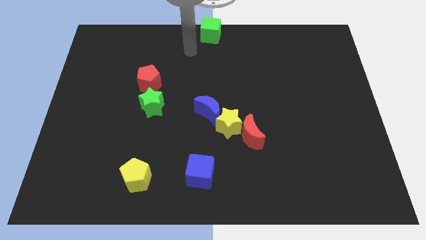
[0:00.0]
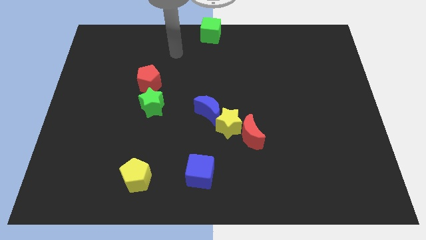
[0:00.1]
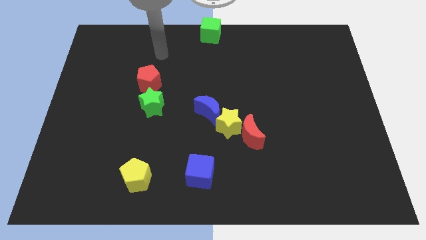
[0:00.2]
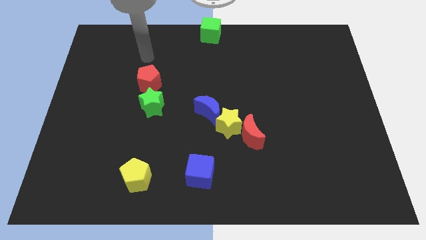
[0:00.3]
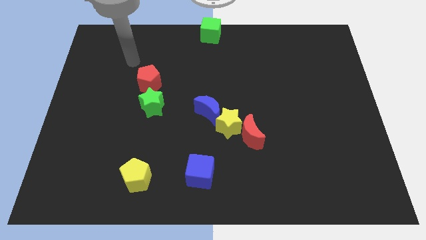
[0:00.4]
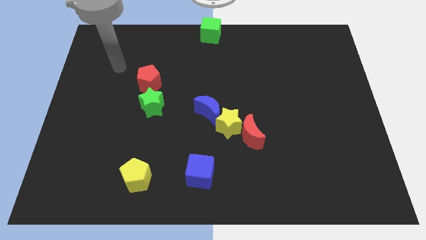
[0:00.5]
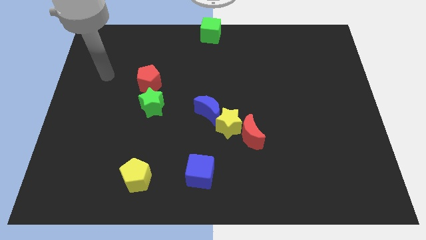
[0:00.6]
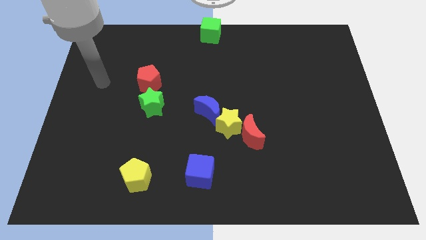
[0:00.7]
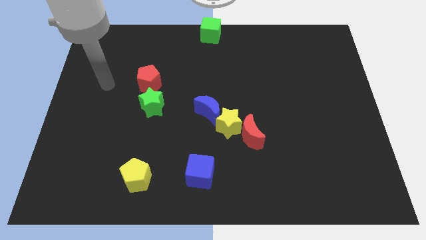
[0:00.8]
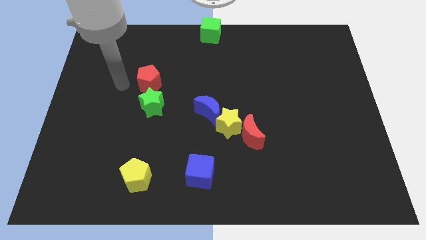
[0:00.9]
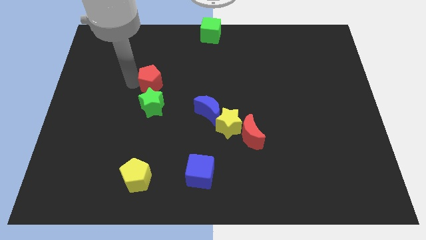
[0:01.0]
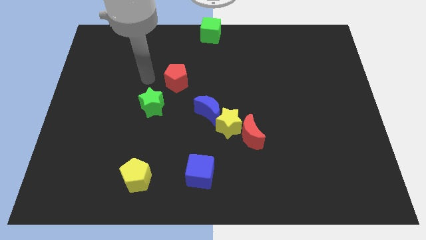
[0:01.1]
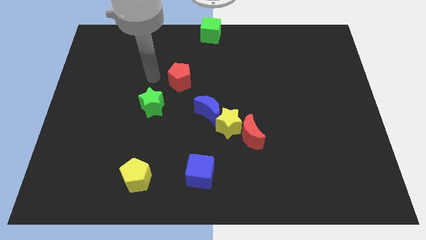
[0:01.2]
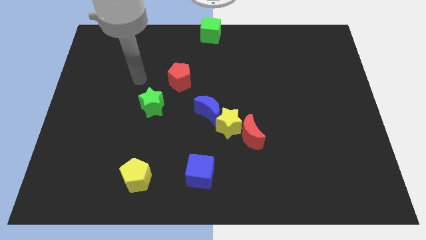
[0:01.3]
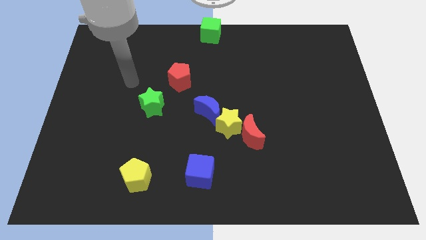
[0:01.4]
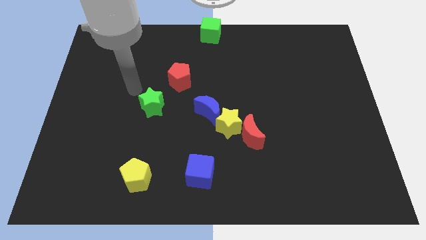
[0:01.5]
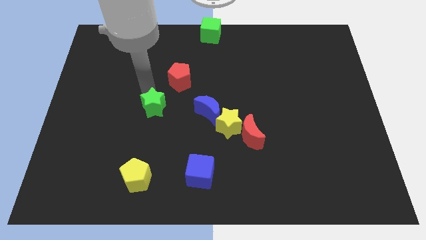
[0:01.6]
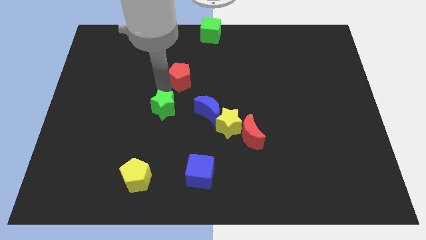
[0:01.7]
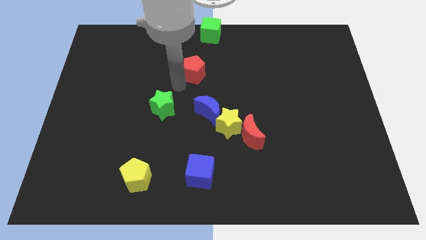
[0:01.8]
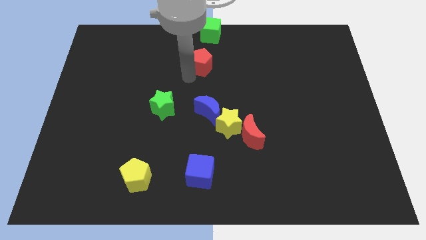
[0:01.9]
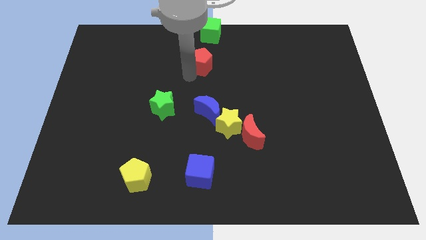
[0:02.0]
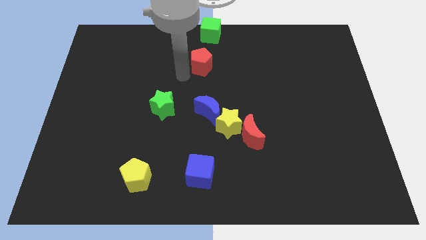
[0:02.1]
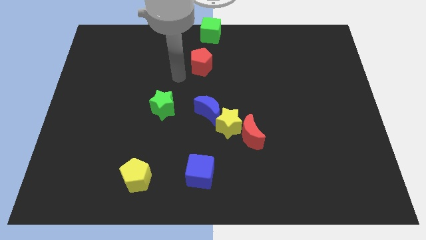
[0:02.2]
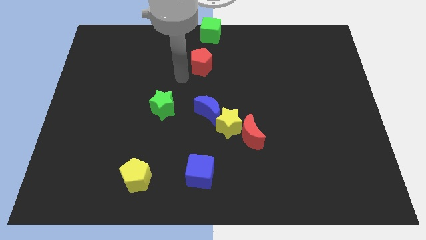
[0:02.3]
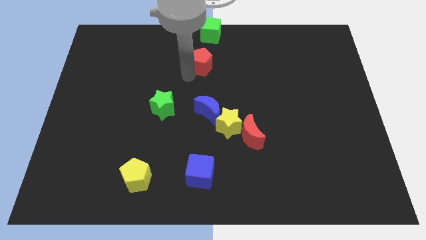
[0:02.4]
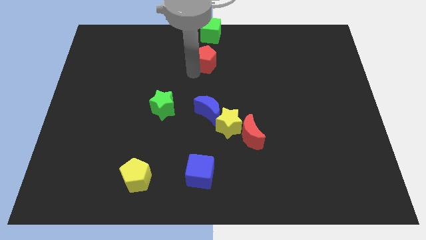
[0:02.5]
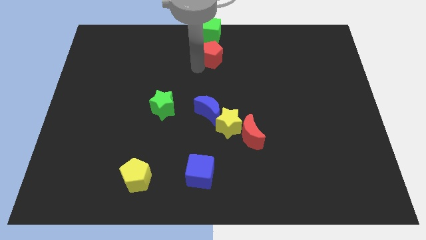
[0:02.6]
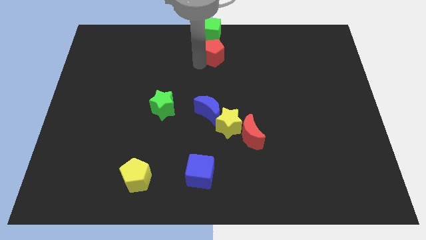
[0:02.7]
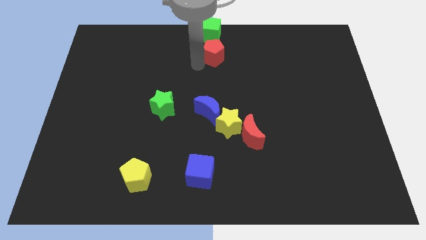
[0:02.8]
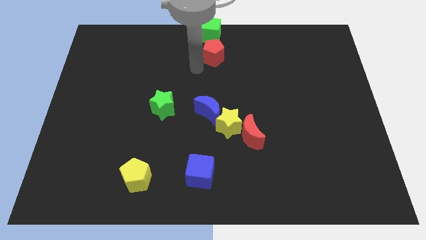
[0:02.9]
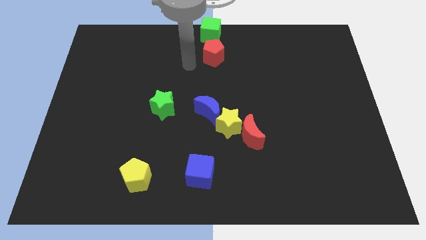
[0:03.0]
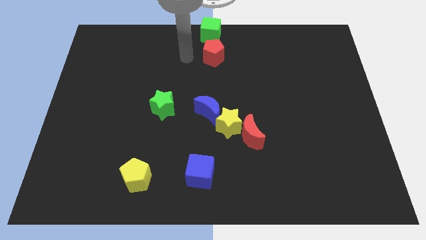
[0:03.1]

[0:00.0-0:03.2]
move the red pentagon below the green cube

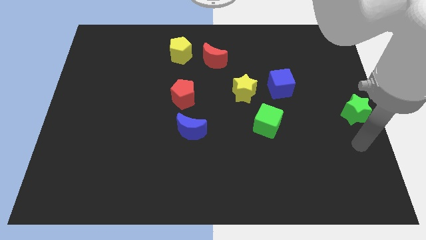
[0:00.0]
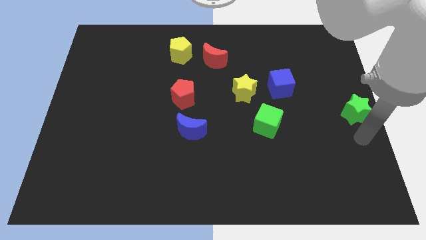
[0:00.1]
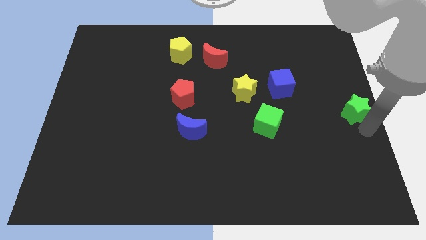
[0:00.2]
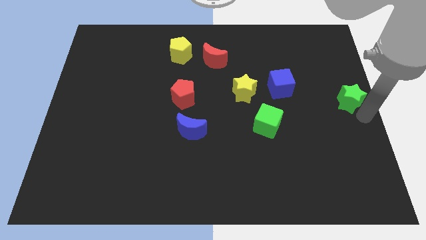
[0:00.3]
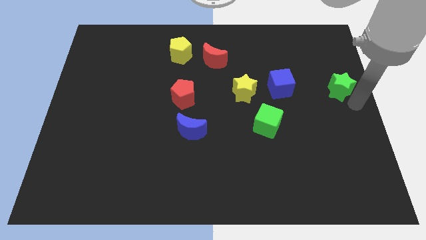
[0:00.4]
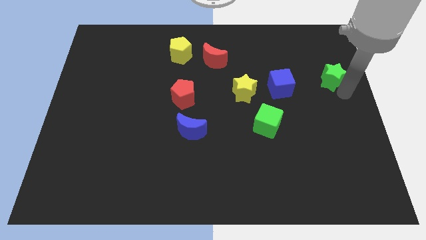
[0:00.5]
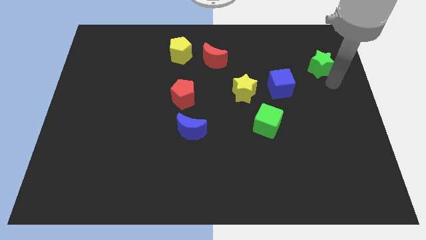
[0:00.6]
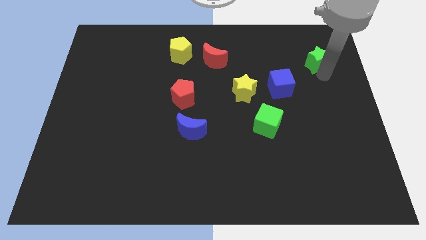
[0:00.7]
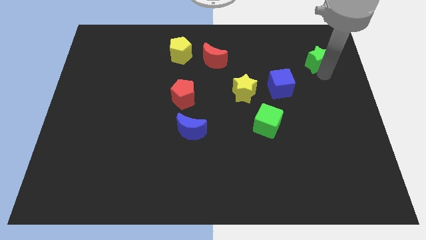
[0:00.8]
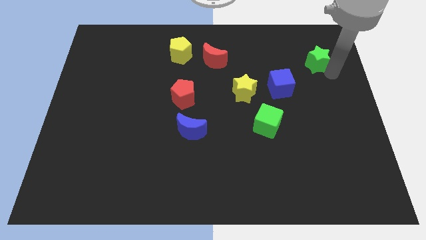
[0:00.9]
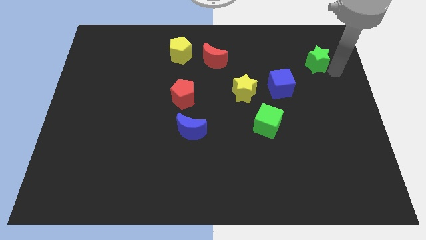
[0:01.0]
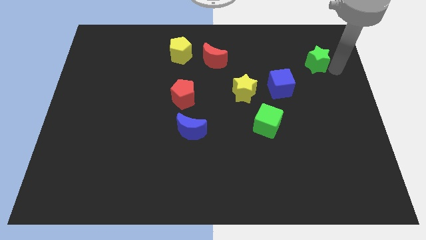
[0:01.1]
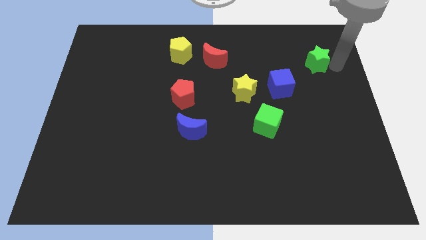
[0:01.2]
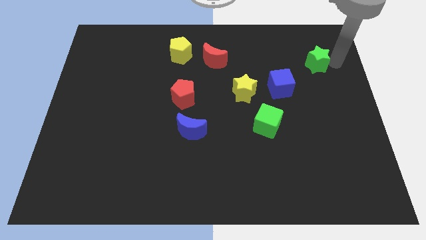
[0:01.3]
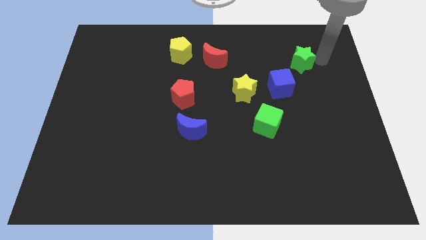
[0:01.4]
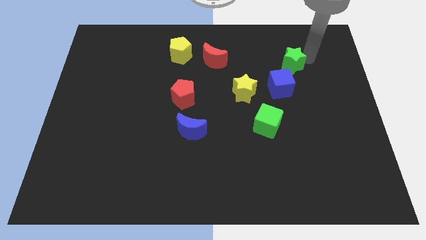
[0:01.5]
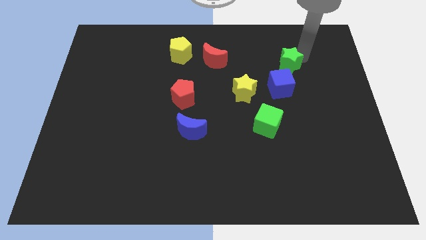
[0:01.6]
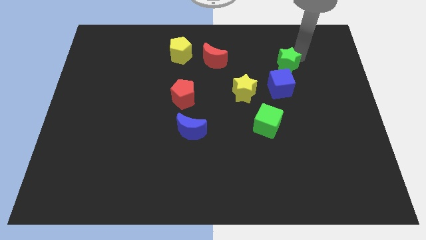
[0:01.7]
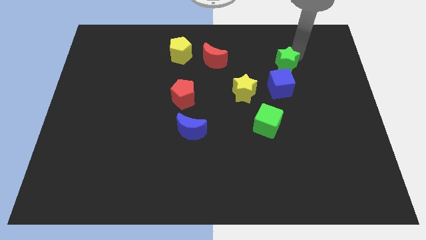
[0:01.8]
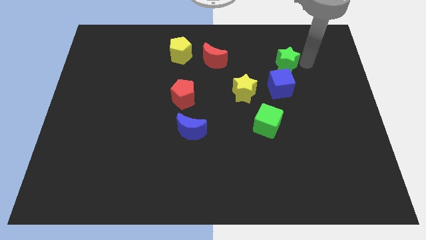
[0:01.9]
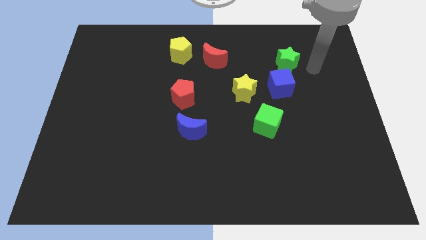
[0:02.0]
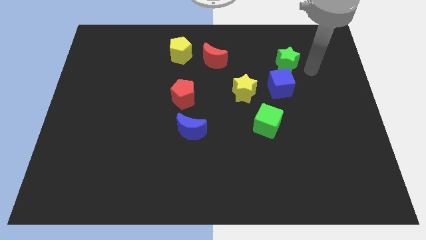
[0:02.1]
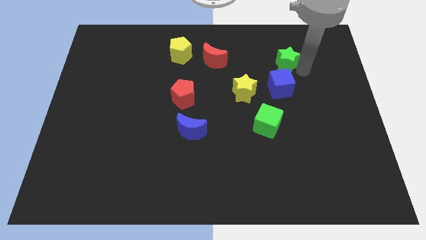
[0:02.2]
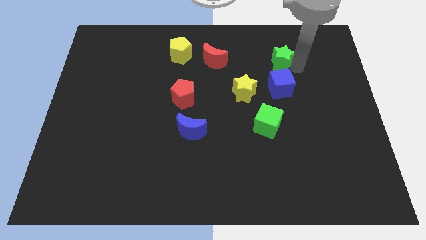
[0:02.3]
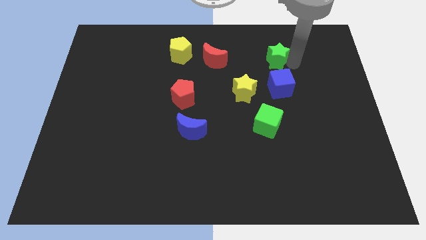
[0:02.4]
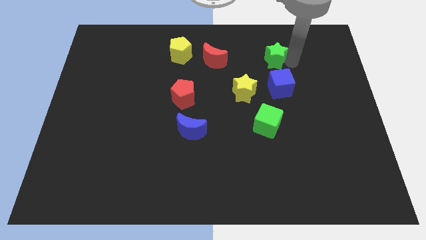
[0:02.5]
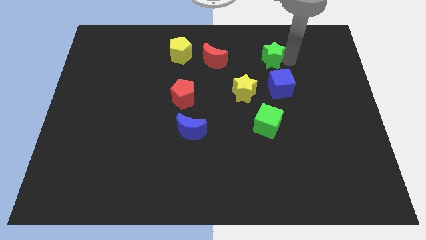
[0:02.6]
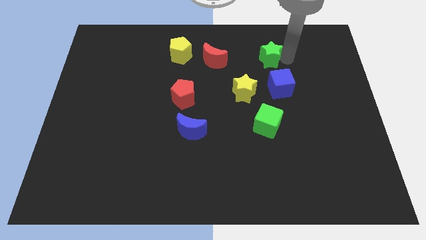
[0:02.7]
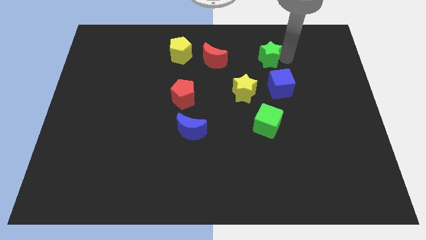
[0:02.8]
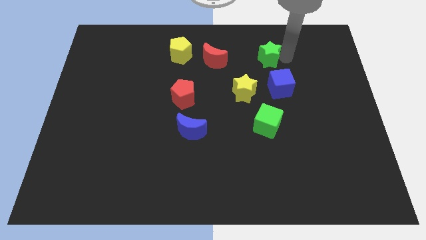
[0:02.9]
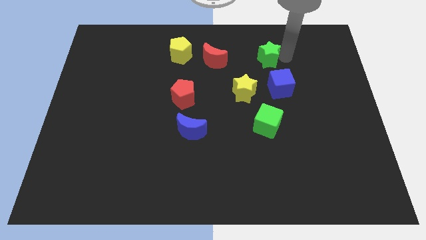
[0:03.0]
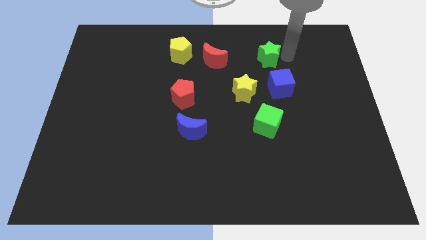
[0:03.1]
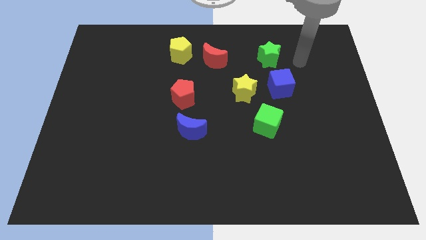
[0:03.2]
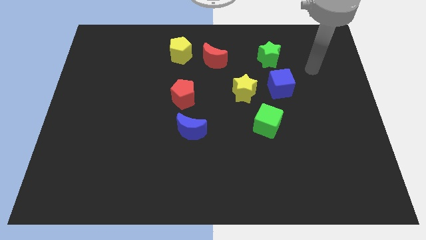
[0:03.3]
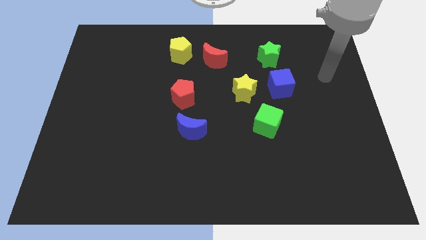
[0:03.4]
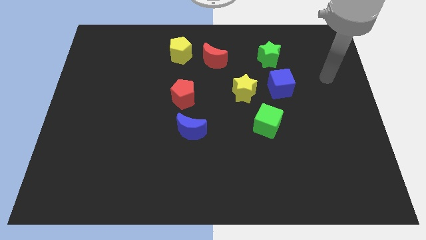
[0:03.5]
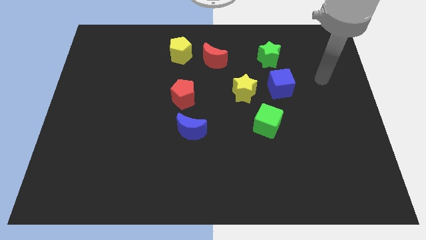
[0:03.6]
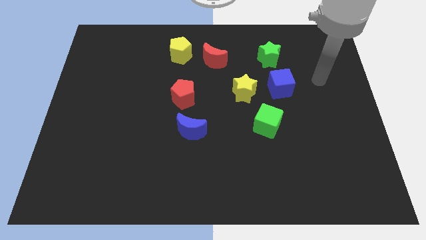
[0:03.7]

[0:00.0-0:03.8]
move the green star to the top of the blue cube

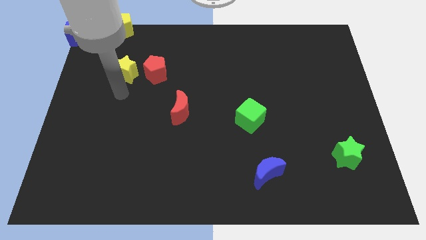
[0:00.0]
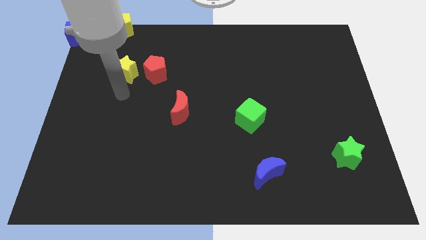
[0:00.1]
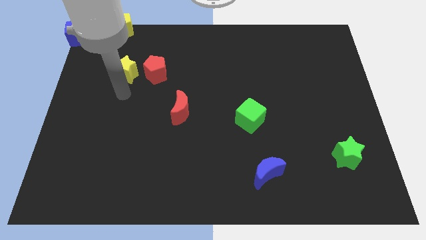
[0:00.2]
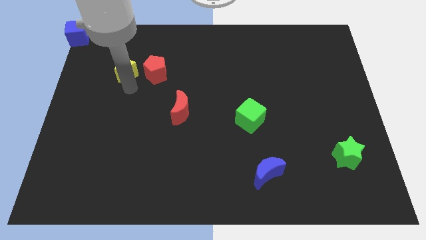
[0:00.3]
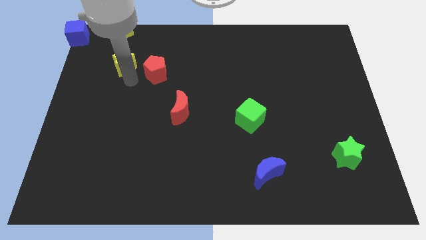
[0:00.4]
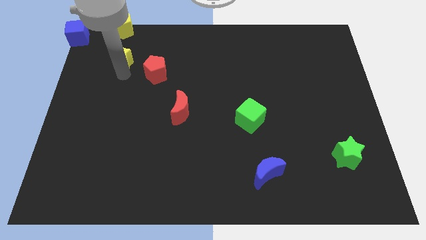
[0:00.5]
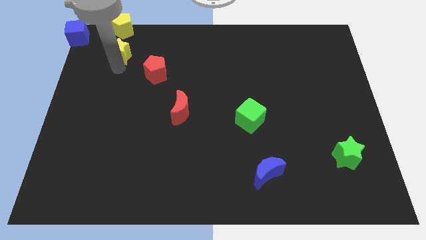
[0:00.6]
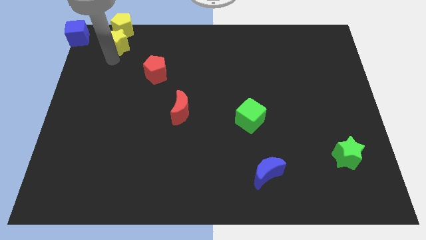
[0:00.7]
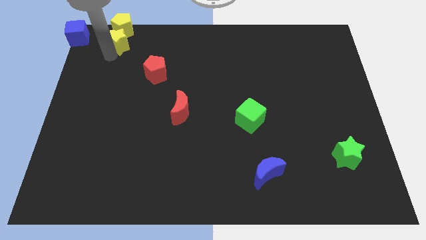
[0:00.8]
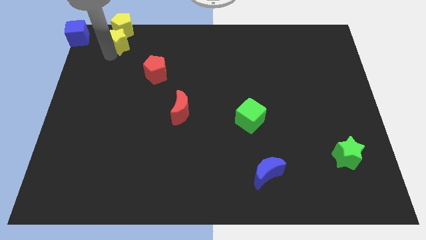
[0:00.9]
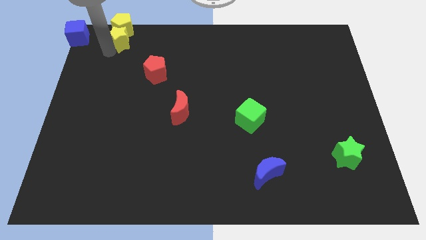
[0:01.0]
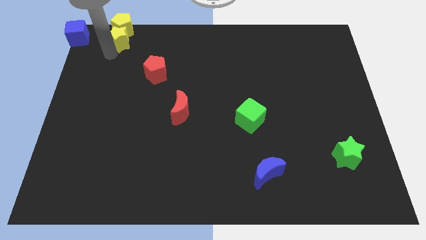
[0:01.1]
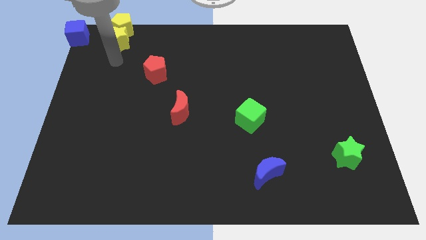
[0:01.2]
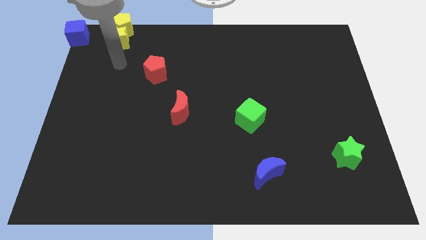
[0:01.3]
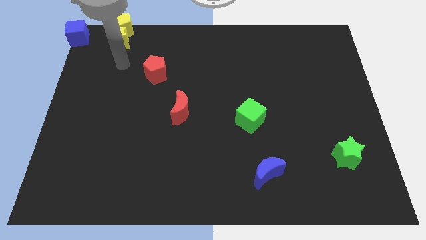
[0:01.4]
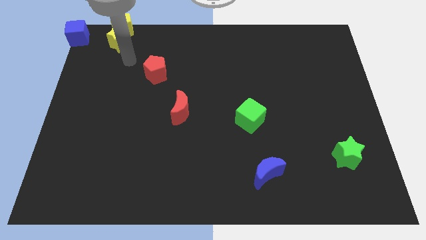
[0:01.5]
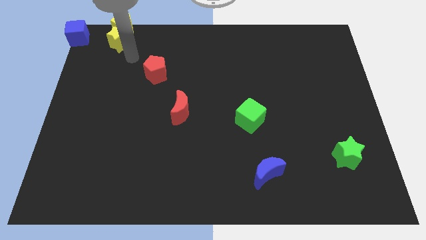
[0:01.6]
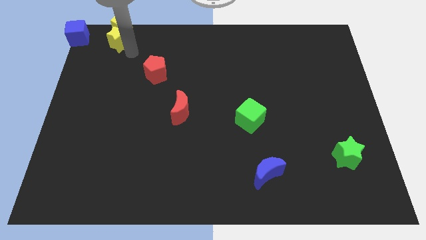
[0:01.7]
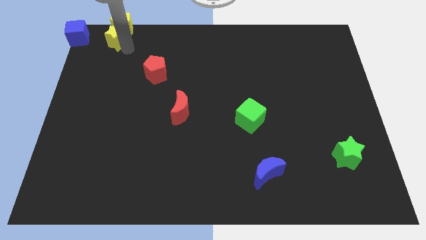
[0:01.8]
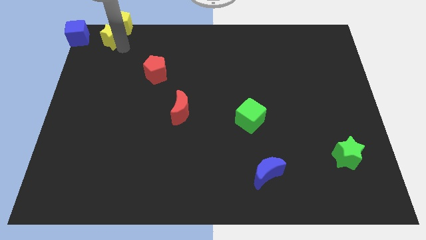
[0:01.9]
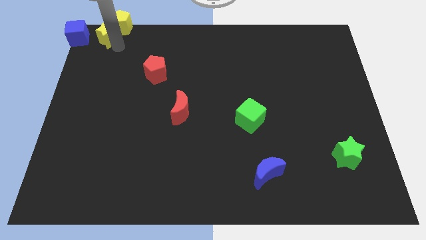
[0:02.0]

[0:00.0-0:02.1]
move yellow star into yellow pentagon
